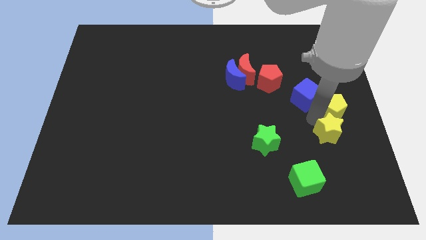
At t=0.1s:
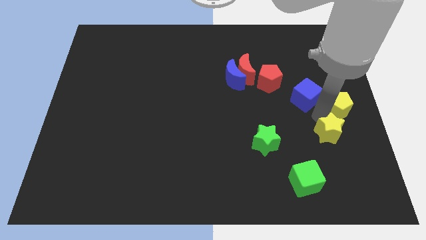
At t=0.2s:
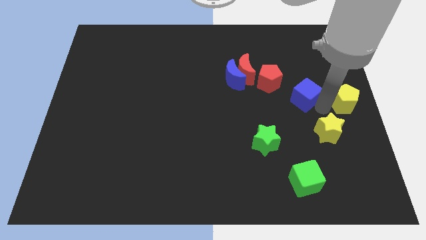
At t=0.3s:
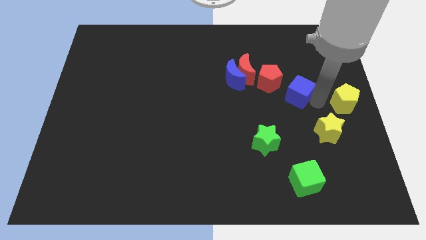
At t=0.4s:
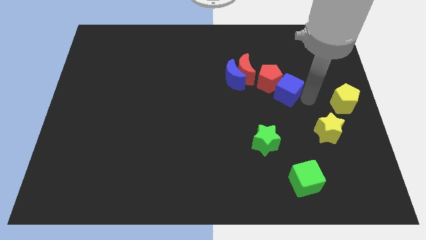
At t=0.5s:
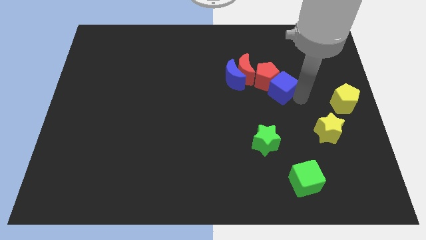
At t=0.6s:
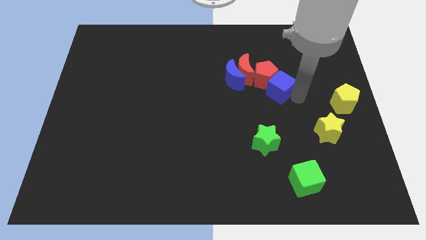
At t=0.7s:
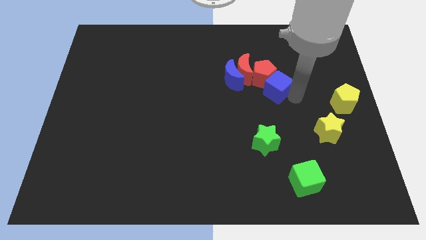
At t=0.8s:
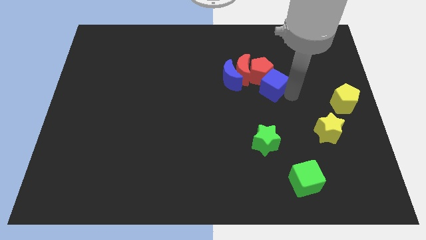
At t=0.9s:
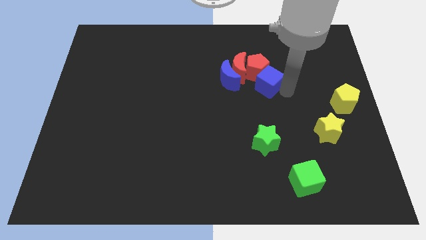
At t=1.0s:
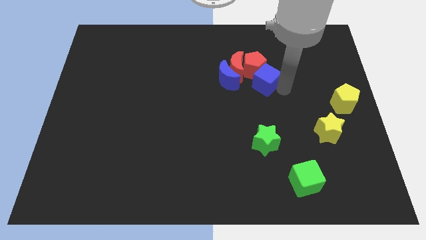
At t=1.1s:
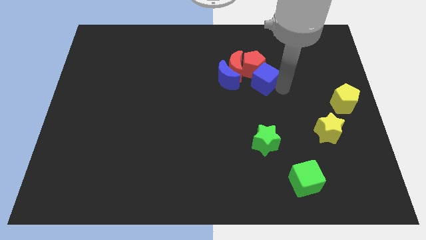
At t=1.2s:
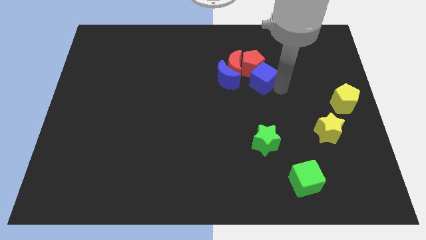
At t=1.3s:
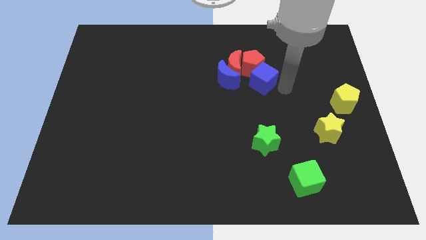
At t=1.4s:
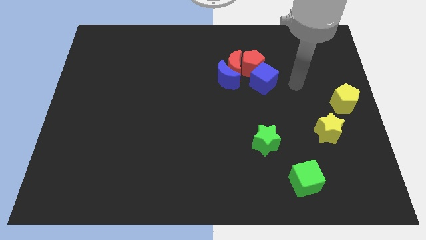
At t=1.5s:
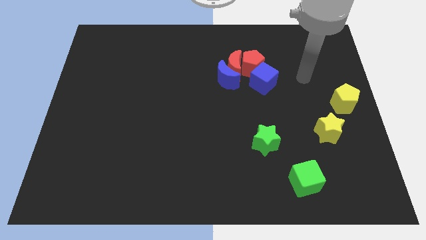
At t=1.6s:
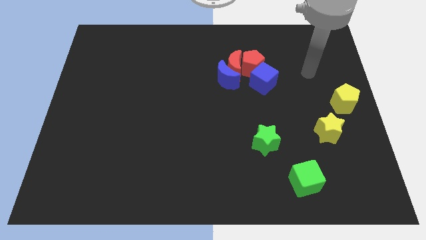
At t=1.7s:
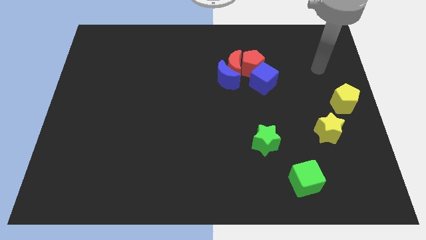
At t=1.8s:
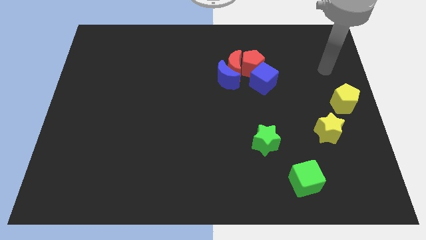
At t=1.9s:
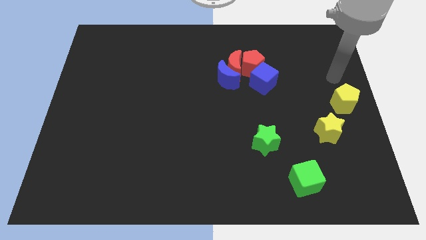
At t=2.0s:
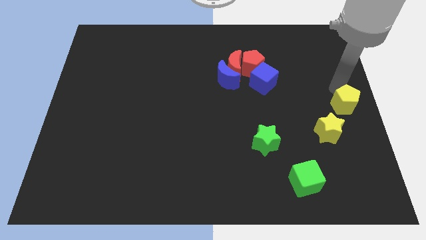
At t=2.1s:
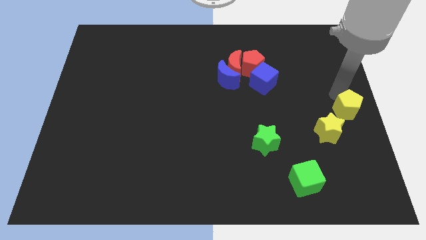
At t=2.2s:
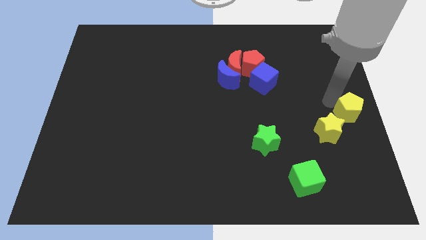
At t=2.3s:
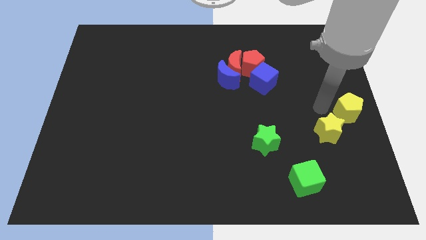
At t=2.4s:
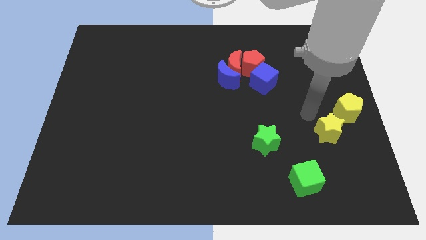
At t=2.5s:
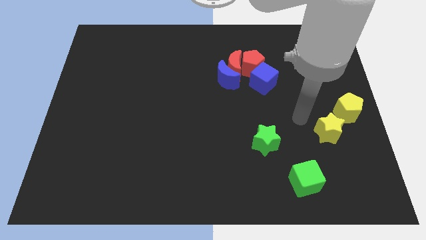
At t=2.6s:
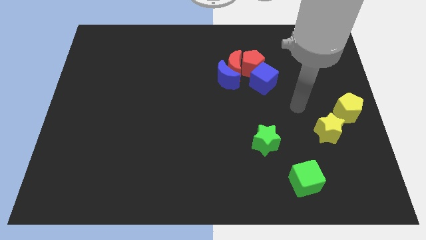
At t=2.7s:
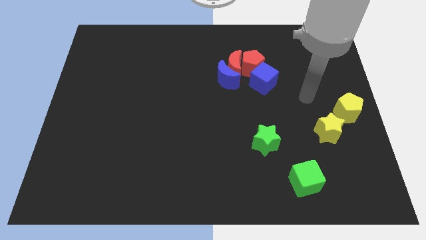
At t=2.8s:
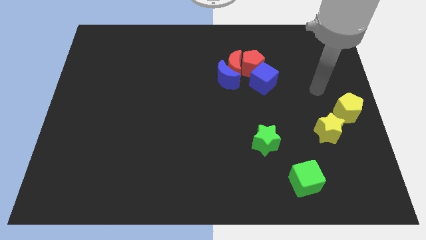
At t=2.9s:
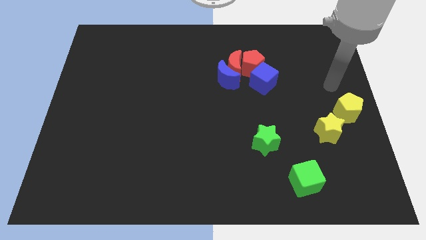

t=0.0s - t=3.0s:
push the red and blue blocks towards the left side of the board

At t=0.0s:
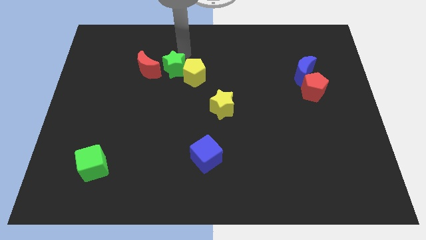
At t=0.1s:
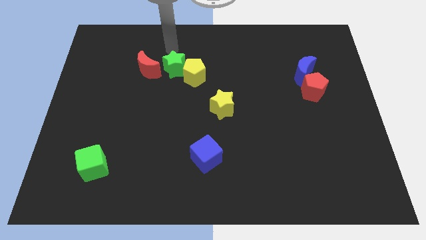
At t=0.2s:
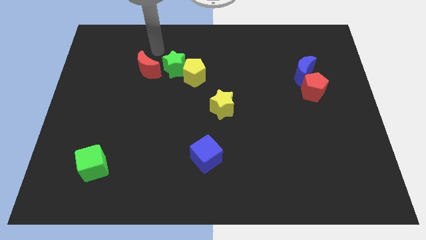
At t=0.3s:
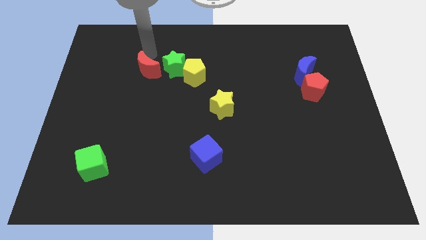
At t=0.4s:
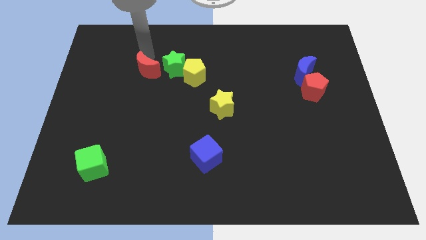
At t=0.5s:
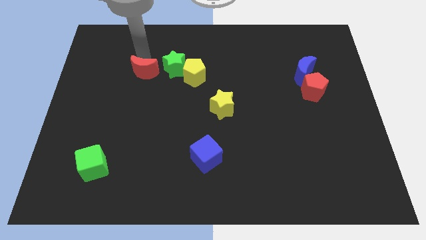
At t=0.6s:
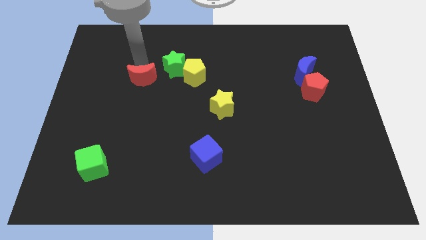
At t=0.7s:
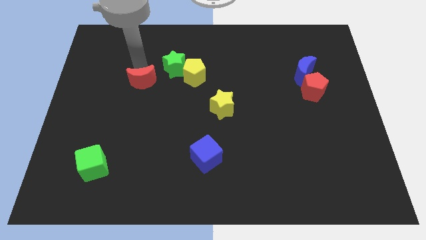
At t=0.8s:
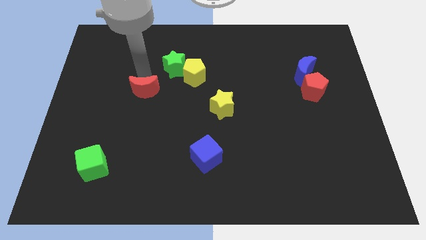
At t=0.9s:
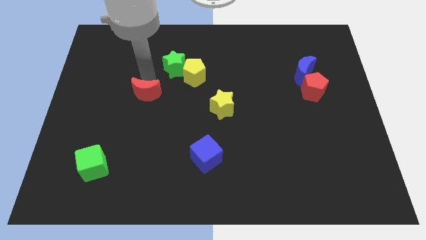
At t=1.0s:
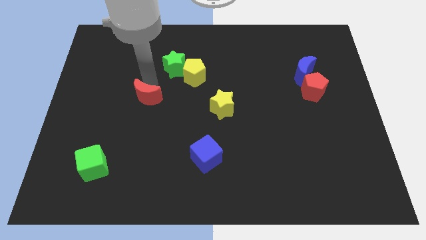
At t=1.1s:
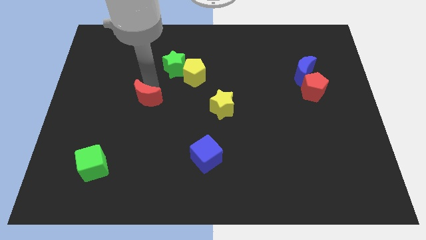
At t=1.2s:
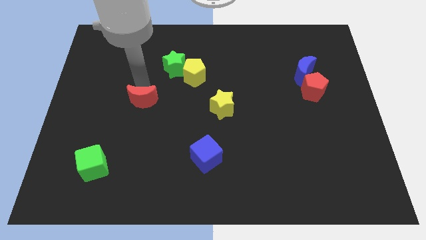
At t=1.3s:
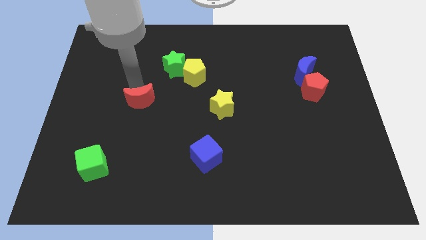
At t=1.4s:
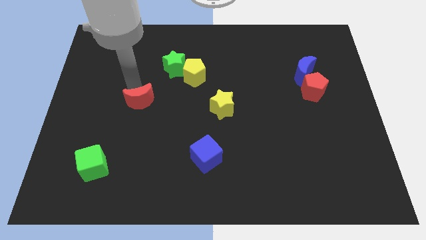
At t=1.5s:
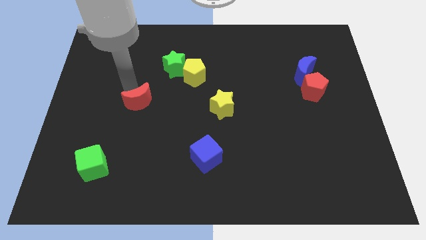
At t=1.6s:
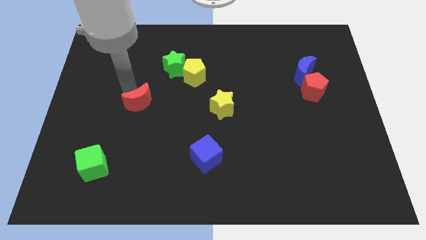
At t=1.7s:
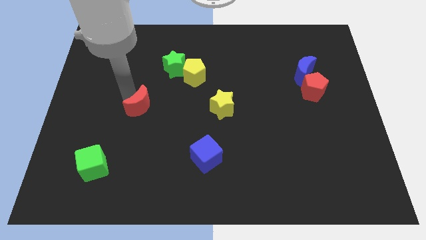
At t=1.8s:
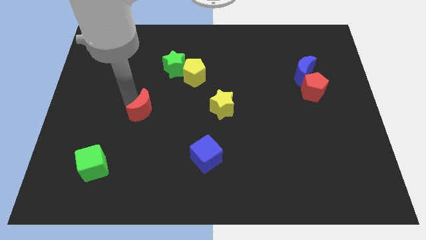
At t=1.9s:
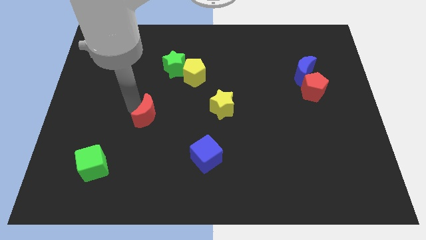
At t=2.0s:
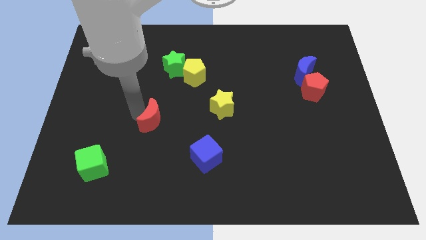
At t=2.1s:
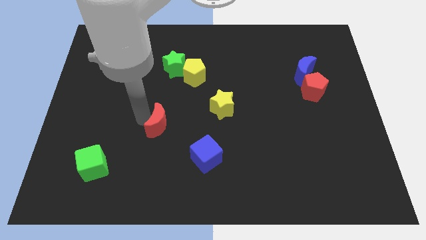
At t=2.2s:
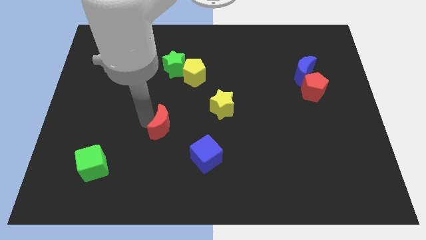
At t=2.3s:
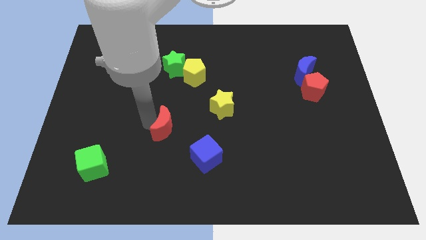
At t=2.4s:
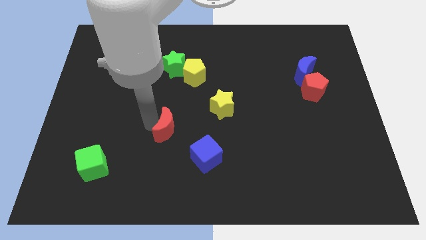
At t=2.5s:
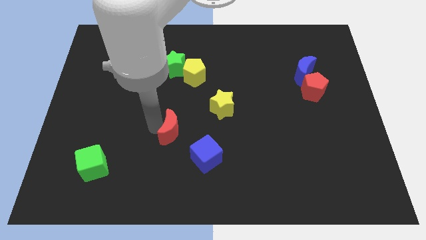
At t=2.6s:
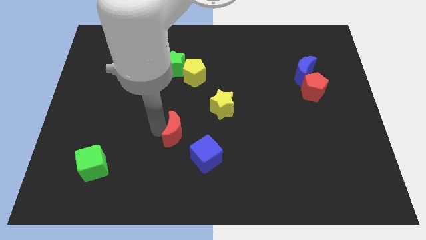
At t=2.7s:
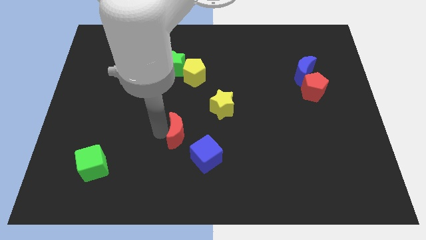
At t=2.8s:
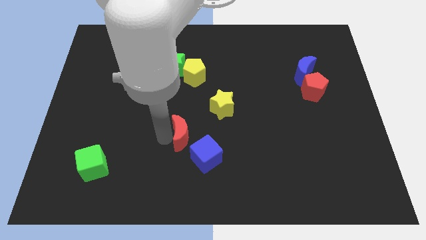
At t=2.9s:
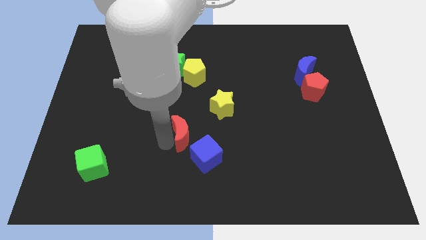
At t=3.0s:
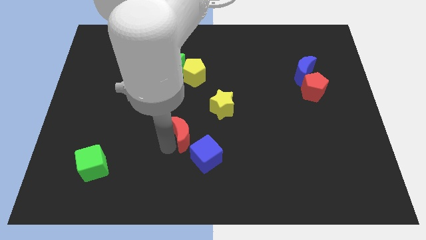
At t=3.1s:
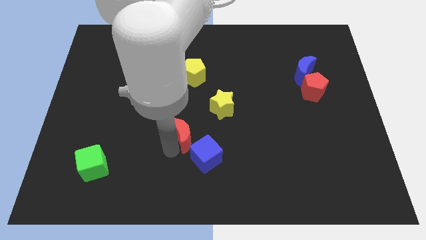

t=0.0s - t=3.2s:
move the red moon left above the blue cube

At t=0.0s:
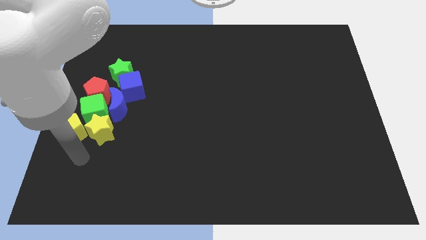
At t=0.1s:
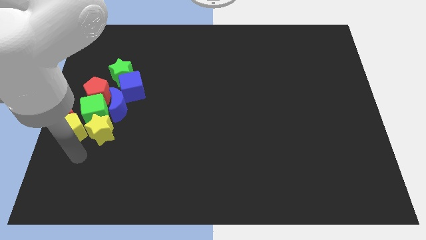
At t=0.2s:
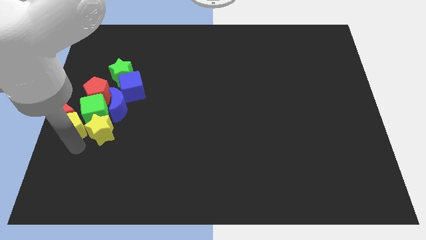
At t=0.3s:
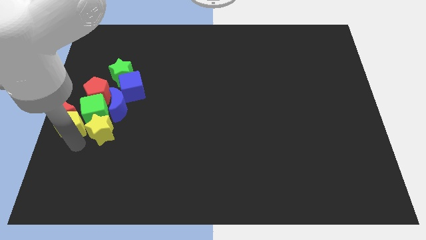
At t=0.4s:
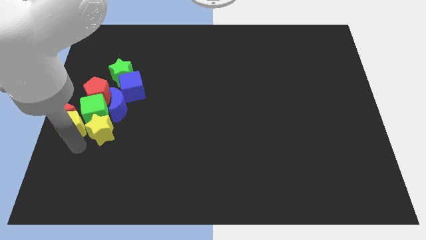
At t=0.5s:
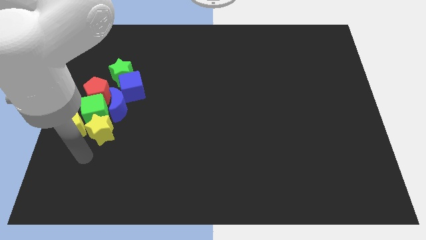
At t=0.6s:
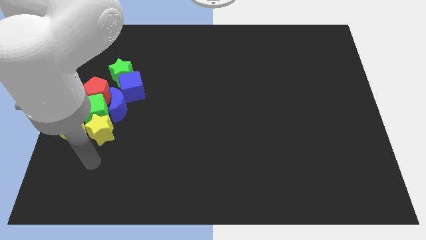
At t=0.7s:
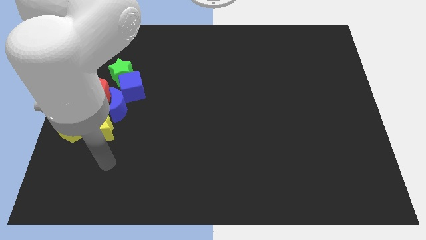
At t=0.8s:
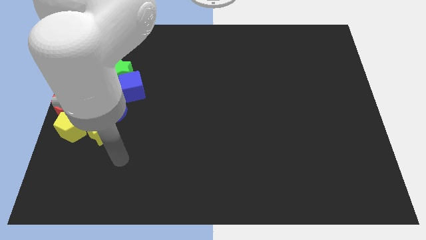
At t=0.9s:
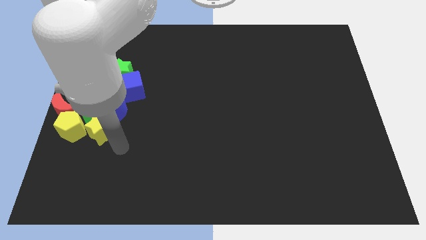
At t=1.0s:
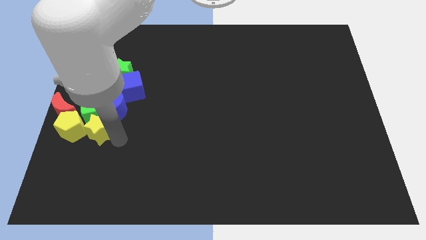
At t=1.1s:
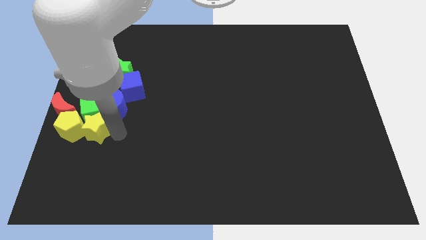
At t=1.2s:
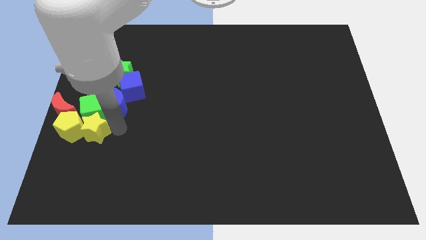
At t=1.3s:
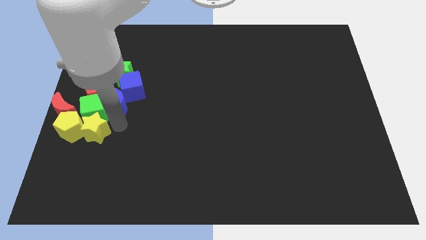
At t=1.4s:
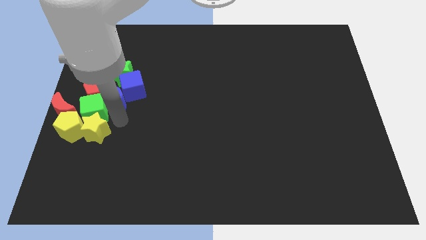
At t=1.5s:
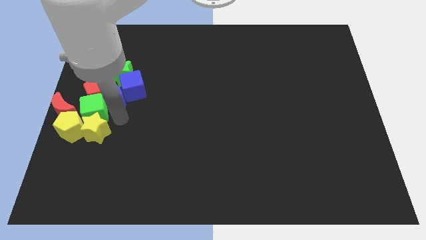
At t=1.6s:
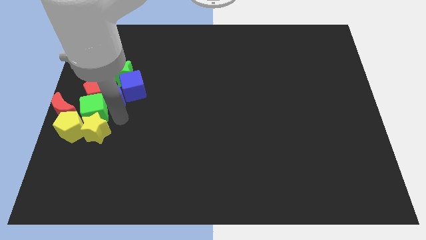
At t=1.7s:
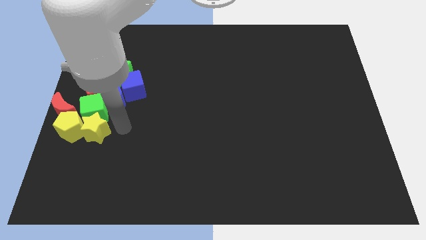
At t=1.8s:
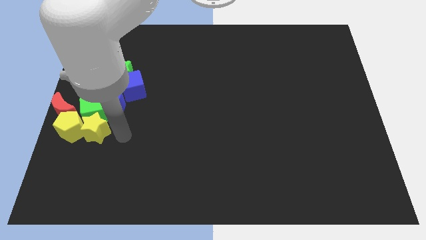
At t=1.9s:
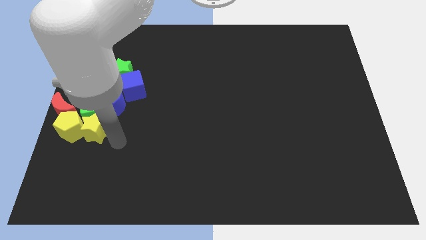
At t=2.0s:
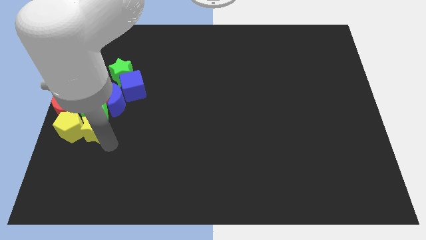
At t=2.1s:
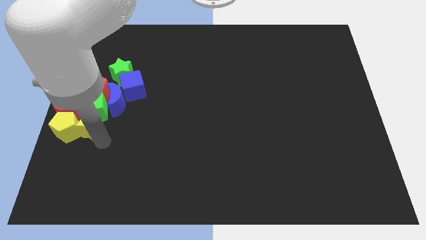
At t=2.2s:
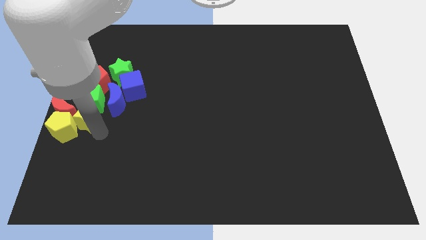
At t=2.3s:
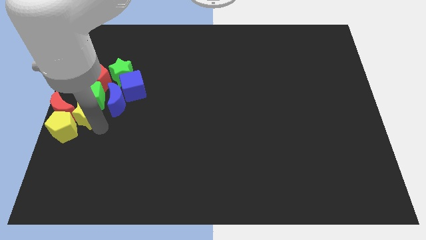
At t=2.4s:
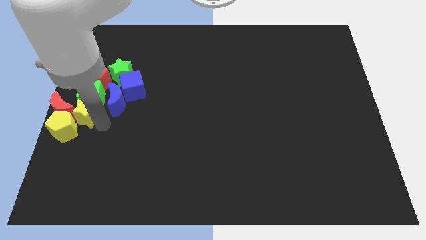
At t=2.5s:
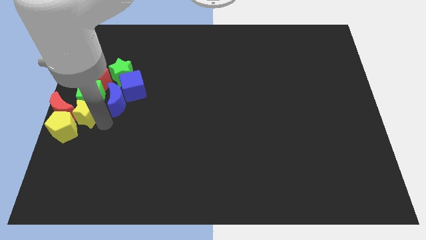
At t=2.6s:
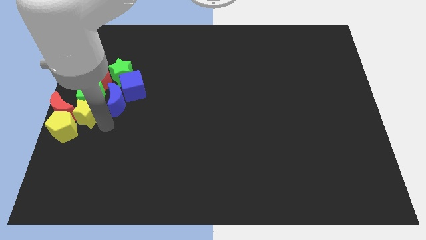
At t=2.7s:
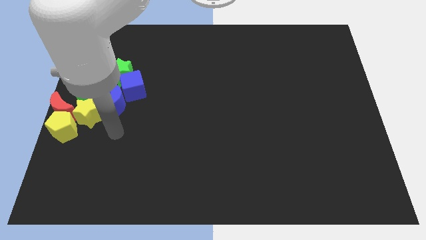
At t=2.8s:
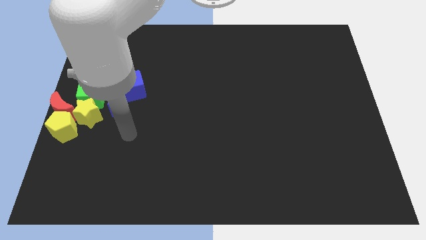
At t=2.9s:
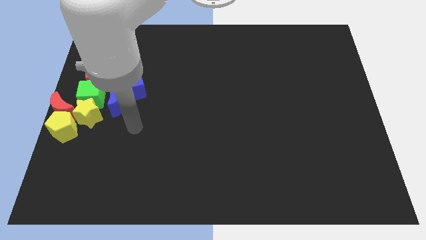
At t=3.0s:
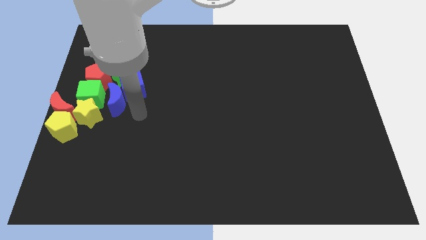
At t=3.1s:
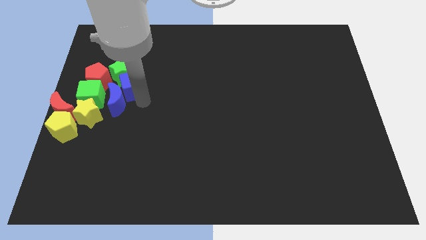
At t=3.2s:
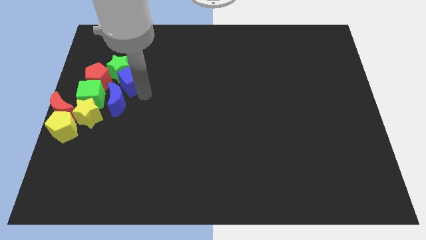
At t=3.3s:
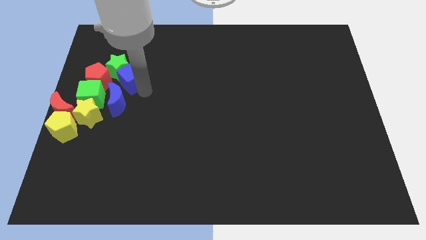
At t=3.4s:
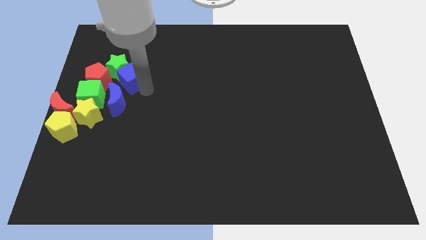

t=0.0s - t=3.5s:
push the red pentagon and the green cube with the yellow star towards the top left of the board
